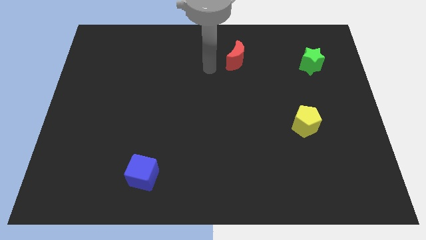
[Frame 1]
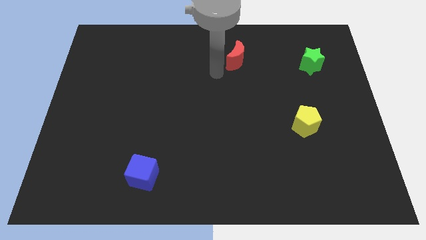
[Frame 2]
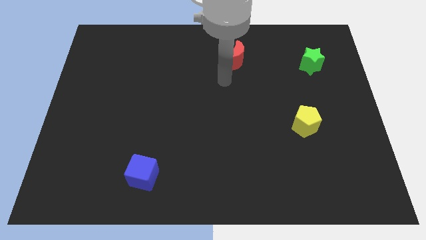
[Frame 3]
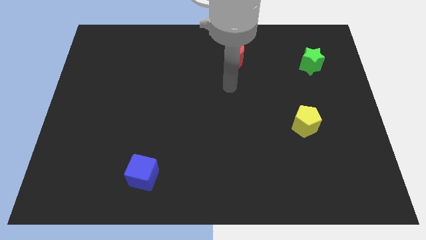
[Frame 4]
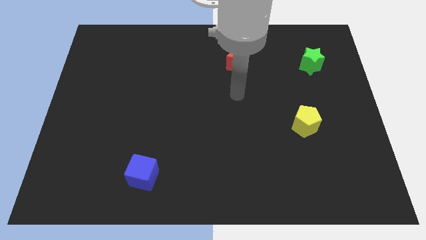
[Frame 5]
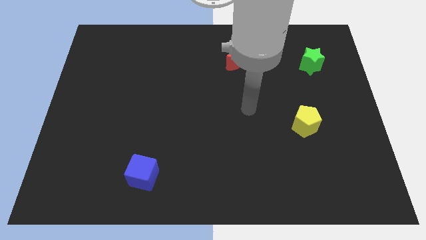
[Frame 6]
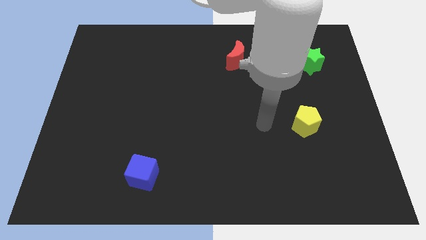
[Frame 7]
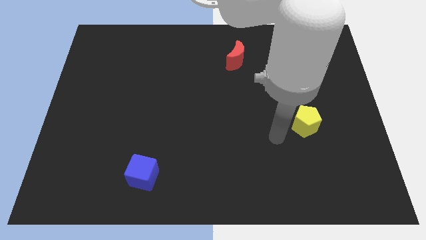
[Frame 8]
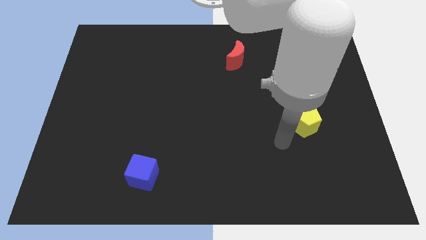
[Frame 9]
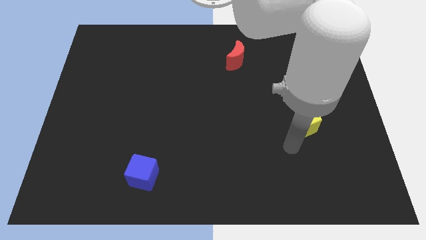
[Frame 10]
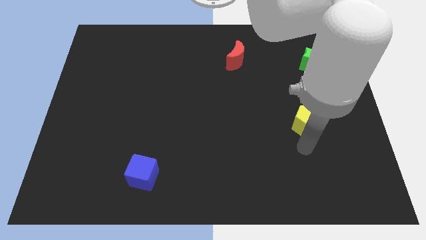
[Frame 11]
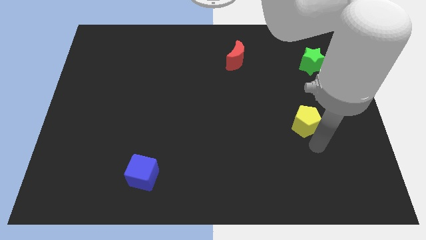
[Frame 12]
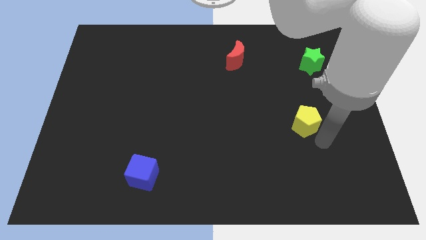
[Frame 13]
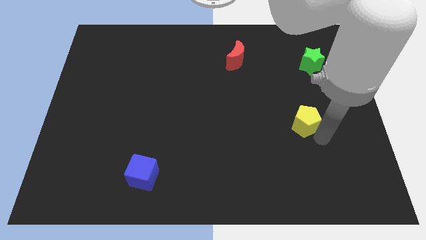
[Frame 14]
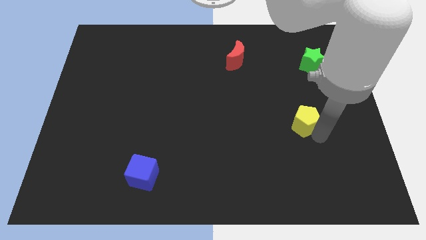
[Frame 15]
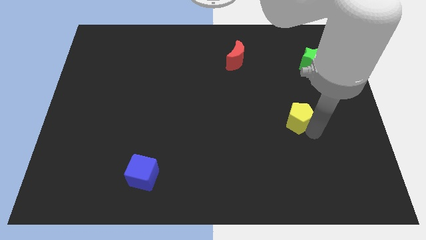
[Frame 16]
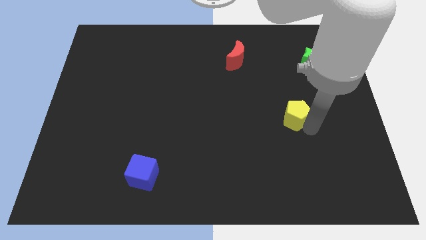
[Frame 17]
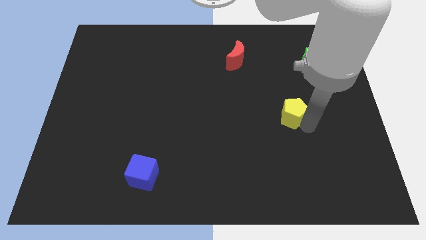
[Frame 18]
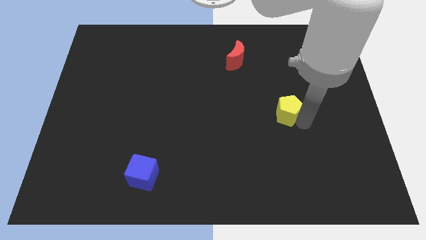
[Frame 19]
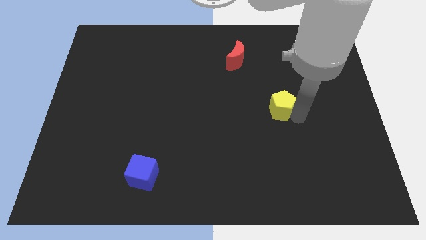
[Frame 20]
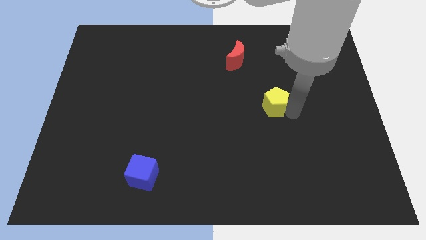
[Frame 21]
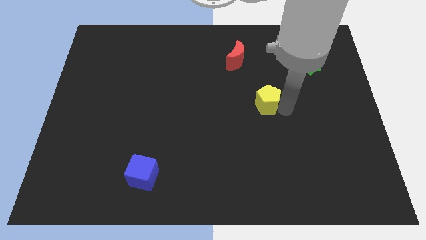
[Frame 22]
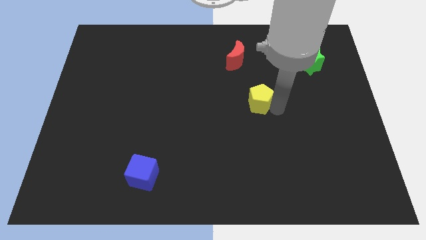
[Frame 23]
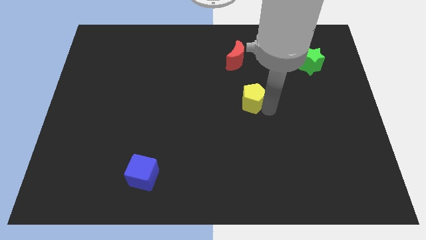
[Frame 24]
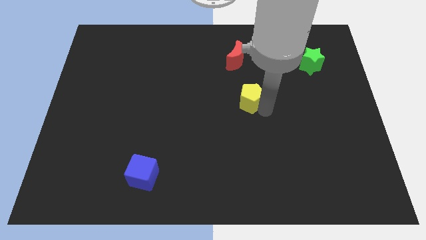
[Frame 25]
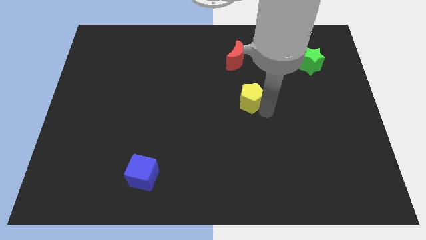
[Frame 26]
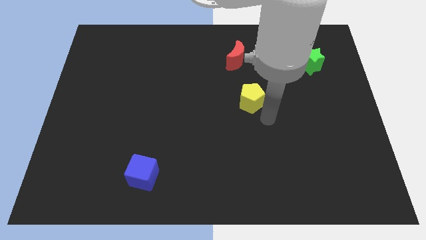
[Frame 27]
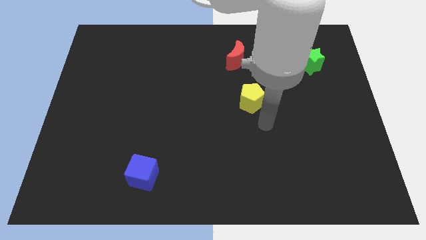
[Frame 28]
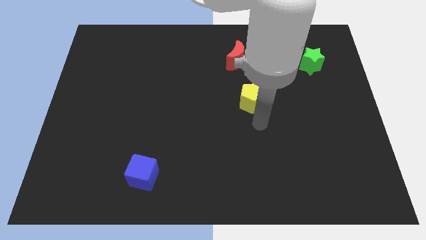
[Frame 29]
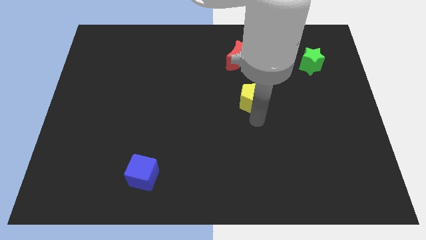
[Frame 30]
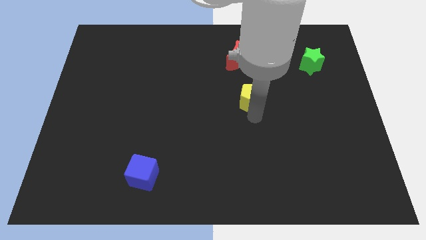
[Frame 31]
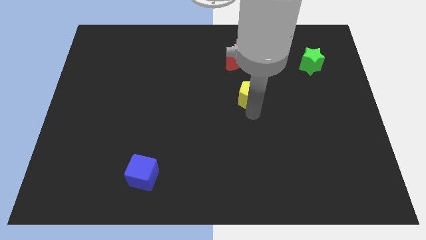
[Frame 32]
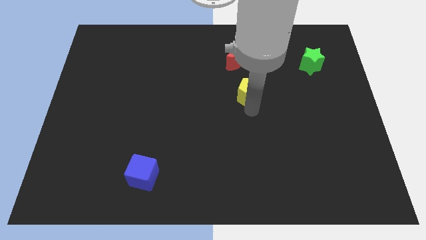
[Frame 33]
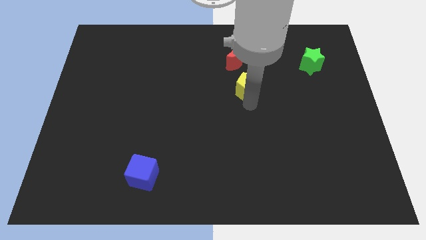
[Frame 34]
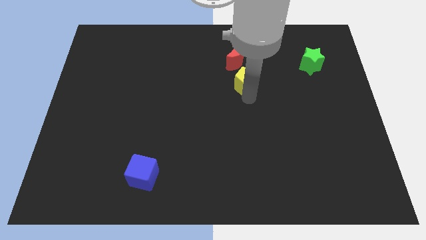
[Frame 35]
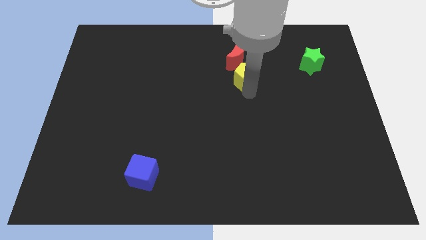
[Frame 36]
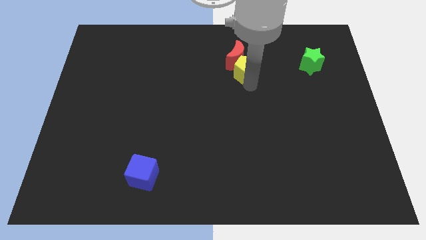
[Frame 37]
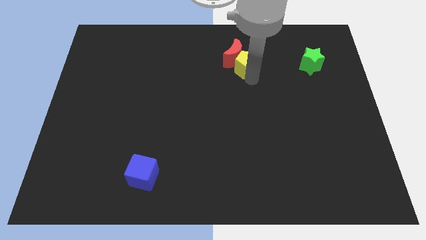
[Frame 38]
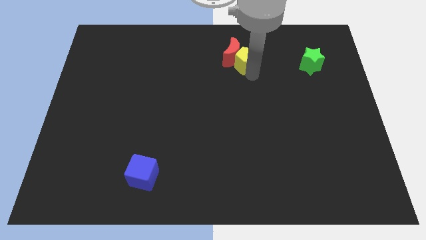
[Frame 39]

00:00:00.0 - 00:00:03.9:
put the yellow block close to the red moon

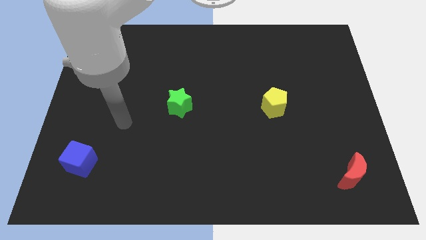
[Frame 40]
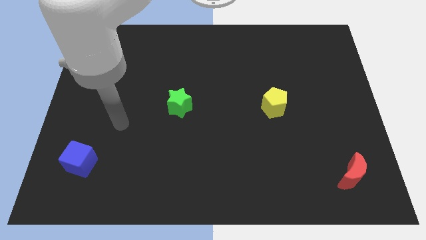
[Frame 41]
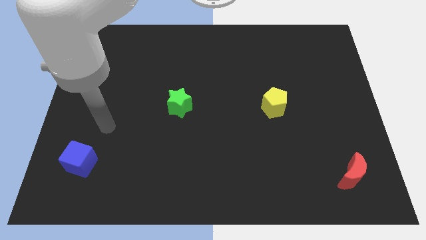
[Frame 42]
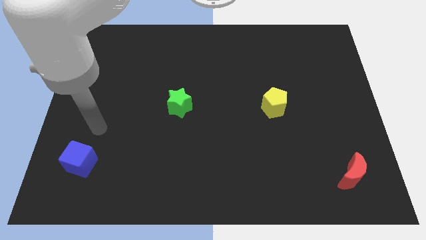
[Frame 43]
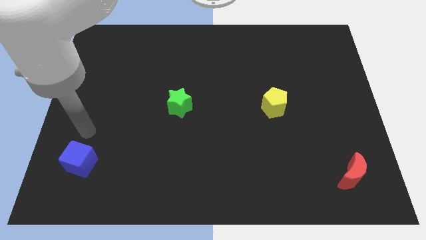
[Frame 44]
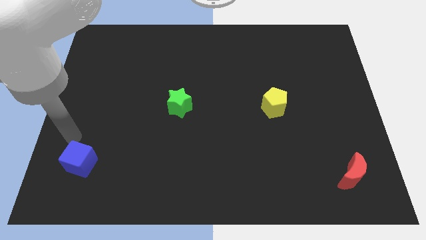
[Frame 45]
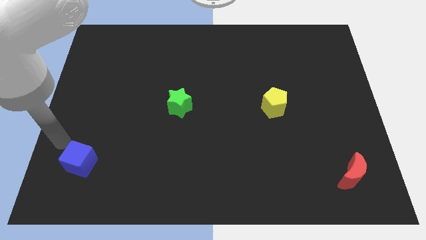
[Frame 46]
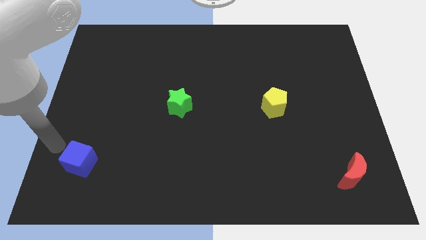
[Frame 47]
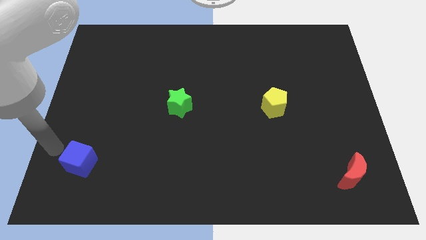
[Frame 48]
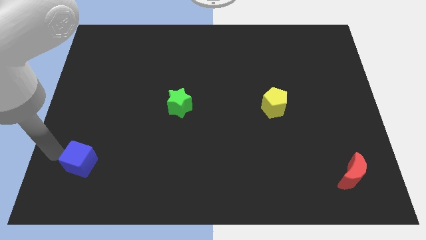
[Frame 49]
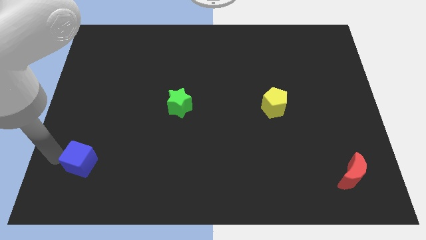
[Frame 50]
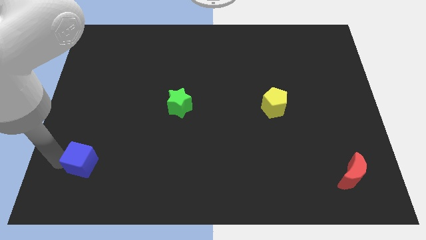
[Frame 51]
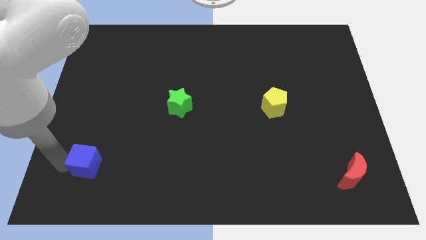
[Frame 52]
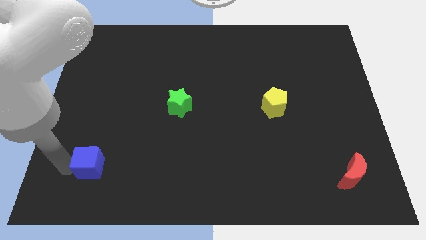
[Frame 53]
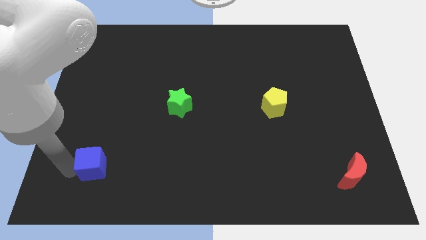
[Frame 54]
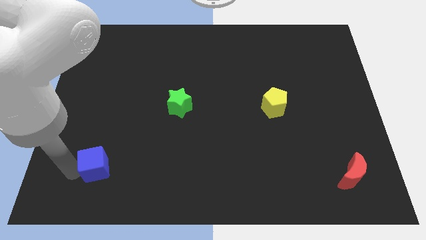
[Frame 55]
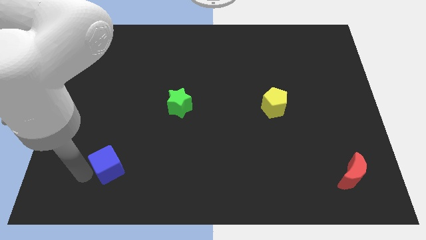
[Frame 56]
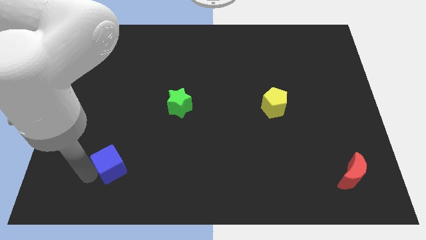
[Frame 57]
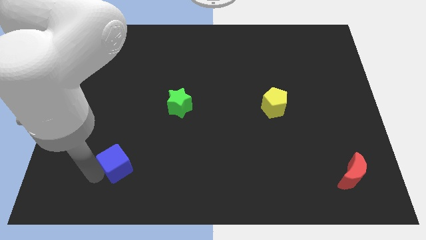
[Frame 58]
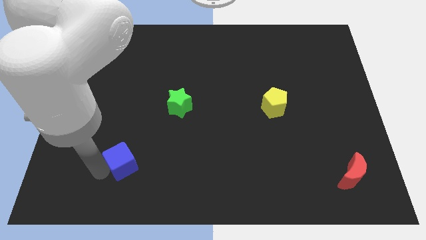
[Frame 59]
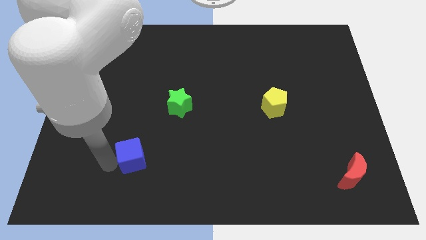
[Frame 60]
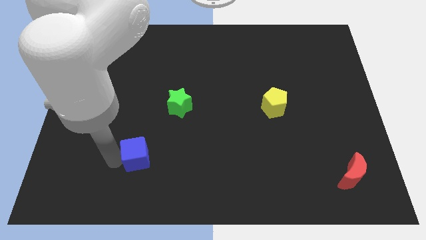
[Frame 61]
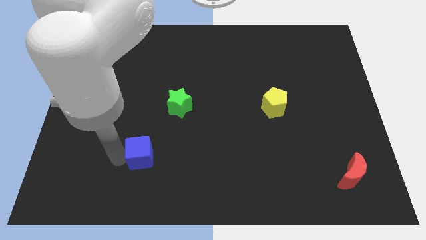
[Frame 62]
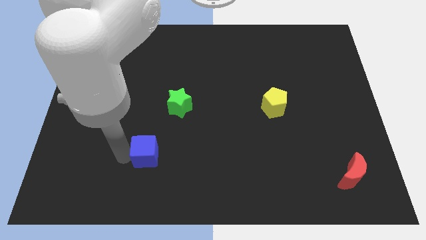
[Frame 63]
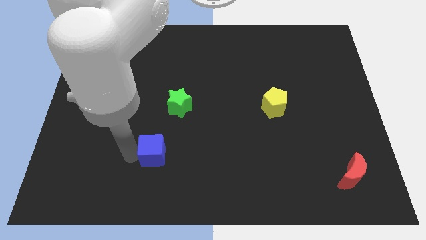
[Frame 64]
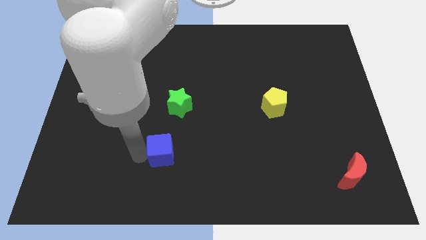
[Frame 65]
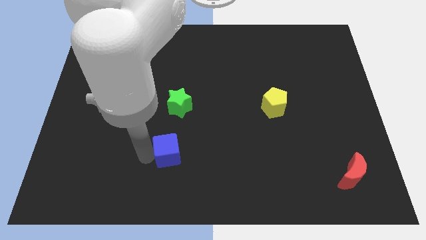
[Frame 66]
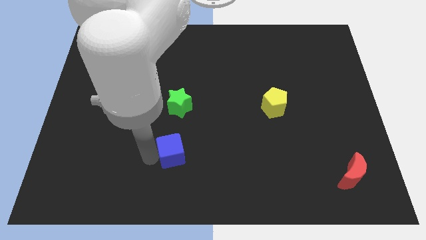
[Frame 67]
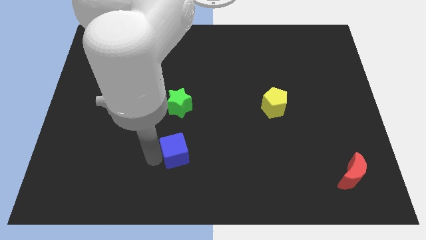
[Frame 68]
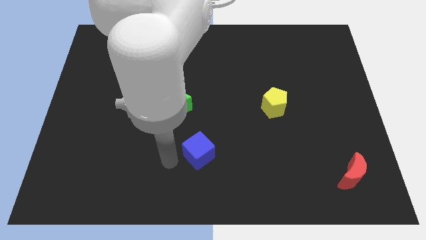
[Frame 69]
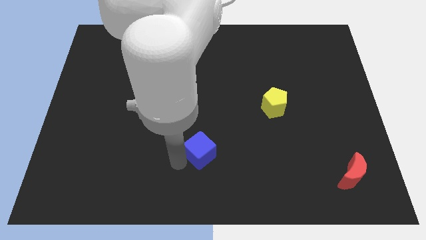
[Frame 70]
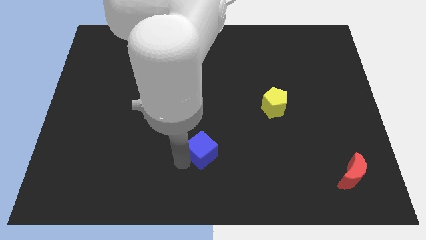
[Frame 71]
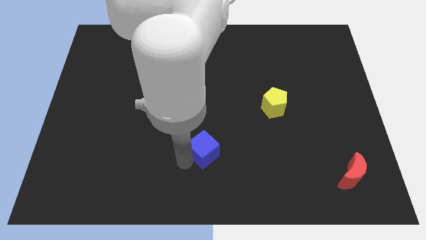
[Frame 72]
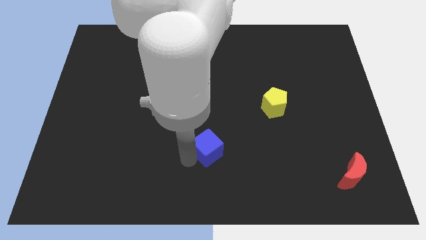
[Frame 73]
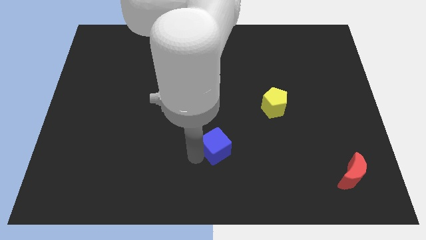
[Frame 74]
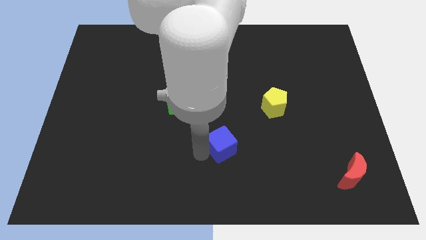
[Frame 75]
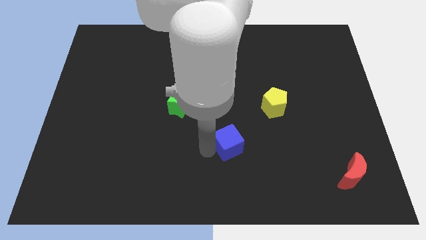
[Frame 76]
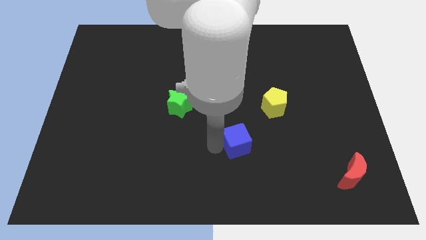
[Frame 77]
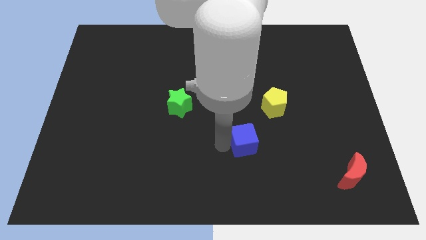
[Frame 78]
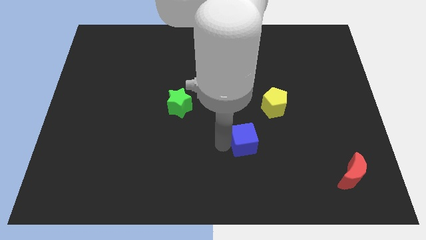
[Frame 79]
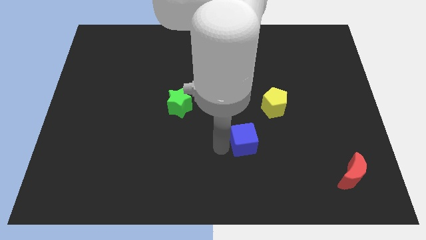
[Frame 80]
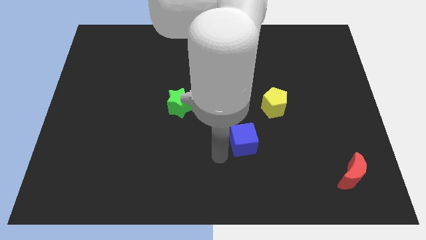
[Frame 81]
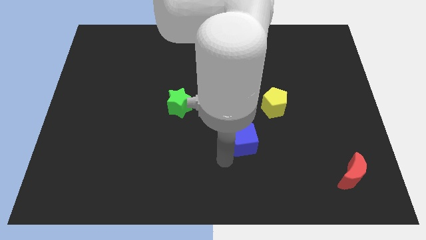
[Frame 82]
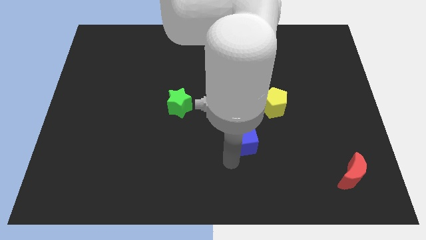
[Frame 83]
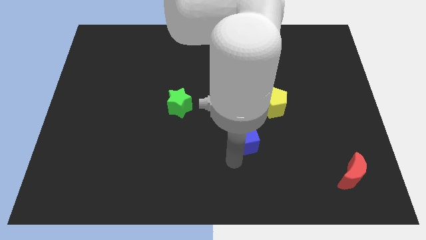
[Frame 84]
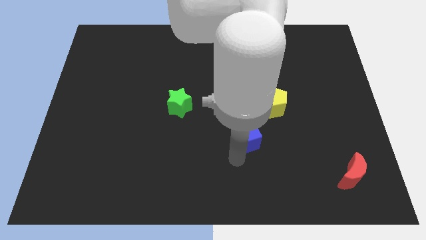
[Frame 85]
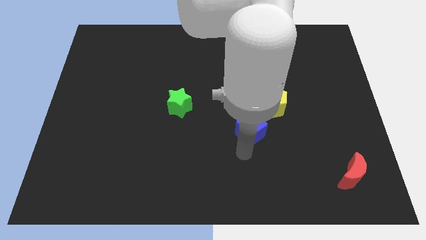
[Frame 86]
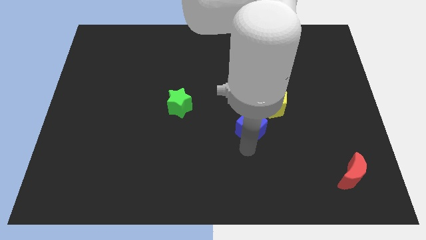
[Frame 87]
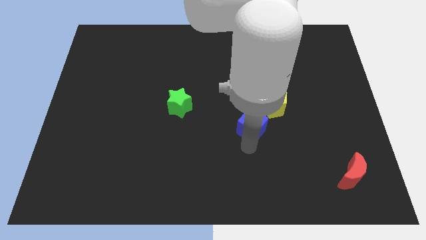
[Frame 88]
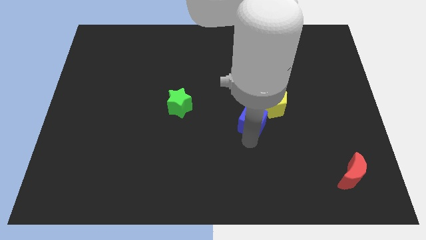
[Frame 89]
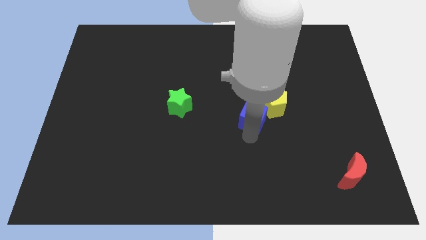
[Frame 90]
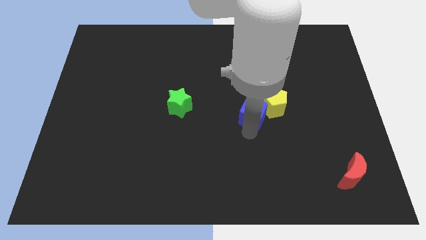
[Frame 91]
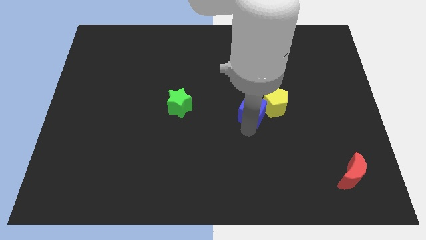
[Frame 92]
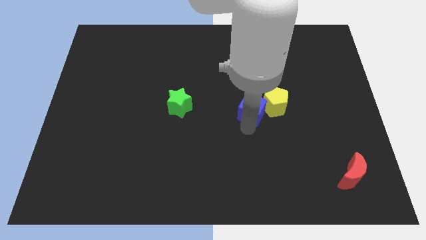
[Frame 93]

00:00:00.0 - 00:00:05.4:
push the blue block towards the yellow pentagon
